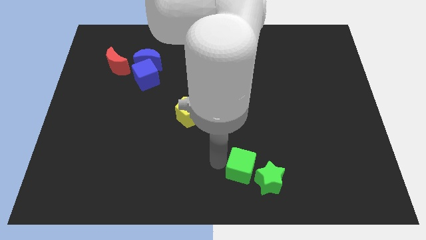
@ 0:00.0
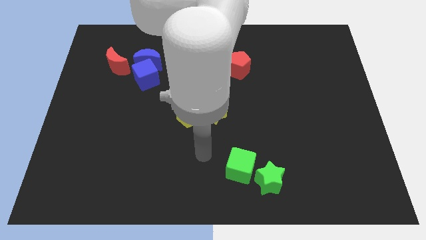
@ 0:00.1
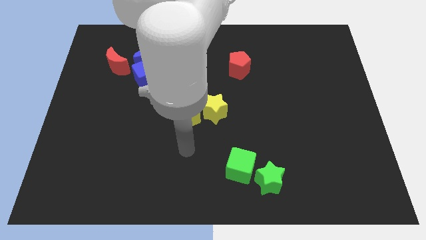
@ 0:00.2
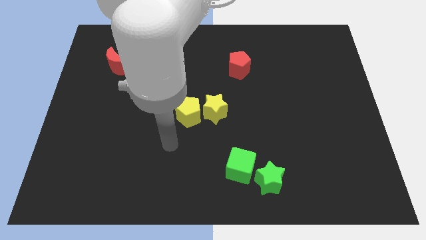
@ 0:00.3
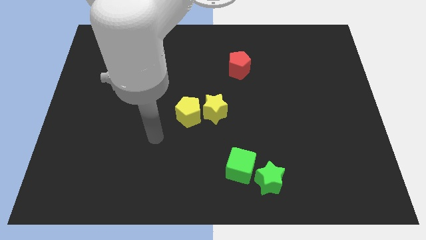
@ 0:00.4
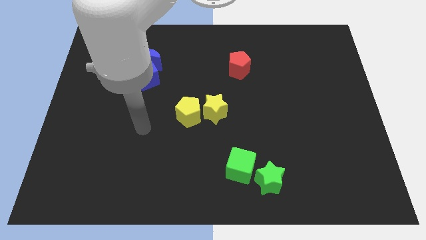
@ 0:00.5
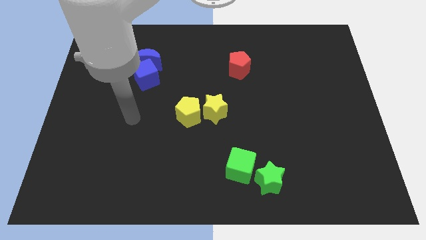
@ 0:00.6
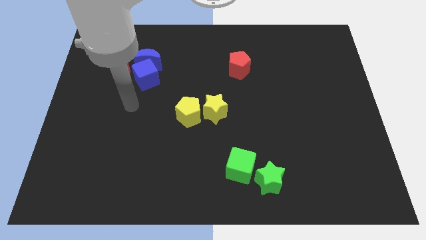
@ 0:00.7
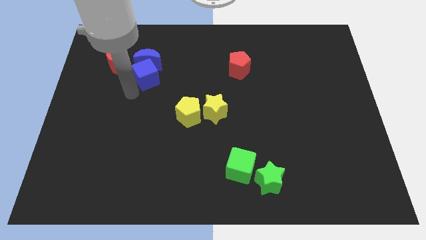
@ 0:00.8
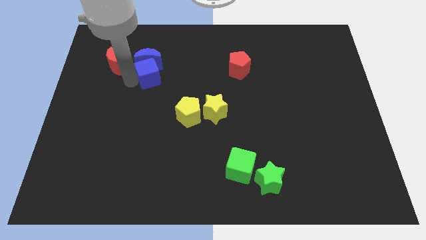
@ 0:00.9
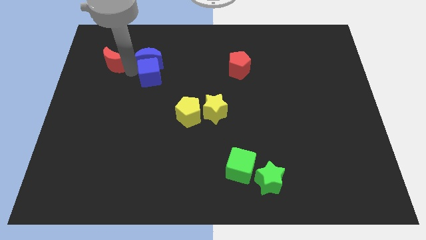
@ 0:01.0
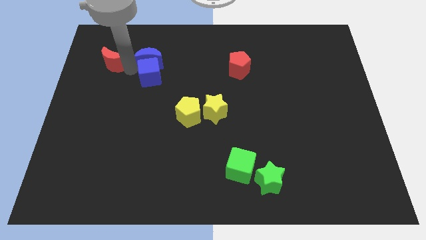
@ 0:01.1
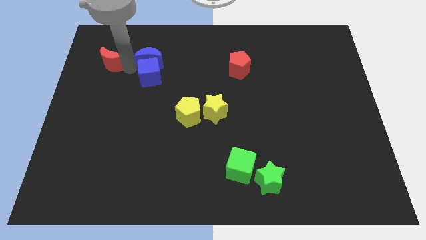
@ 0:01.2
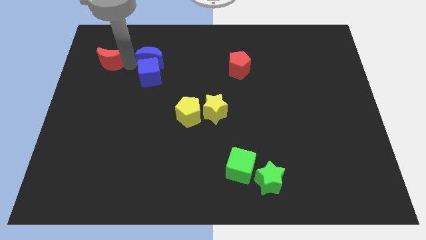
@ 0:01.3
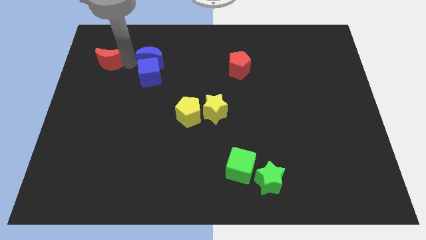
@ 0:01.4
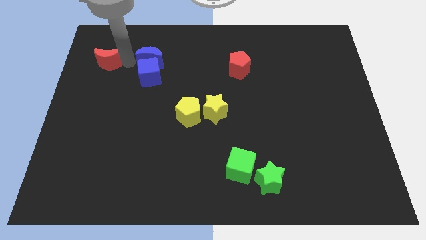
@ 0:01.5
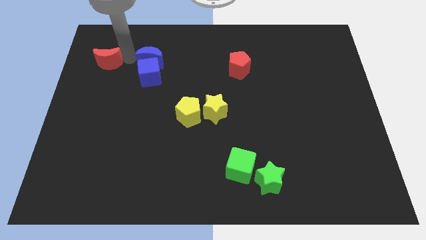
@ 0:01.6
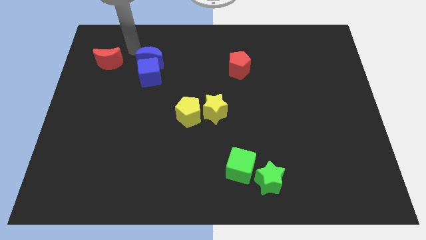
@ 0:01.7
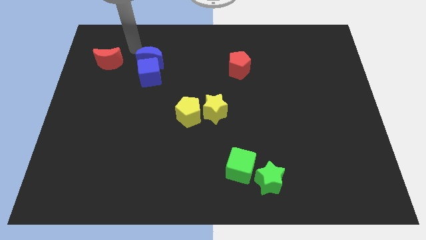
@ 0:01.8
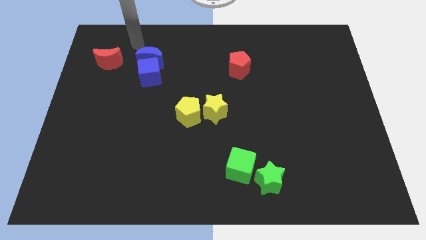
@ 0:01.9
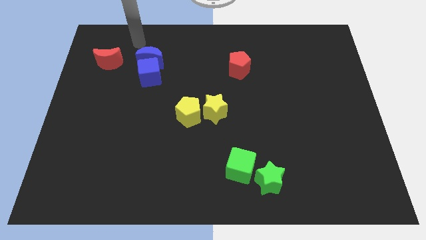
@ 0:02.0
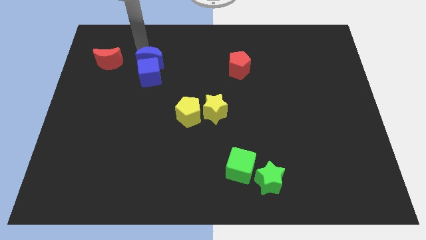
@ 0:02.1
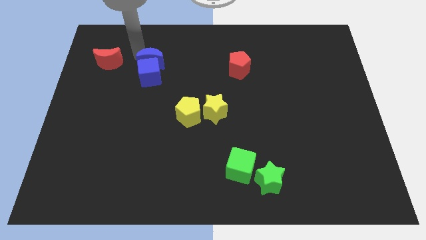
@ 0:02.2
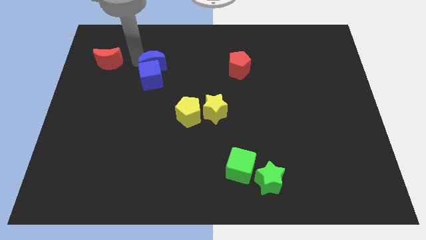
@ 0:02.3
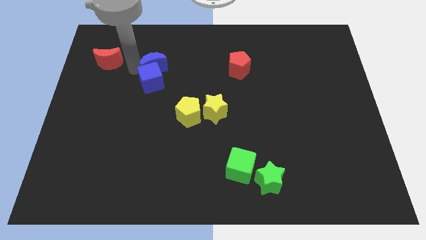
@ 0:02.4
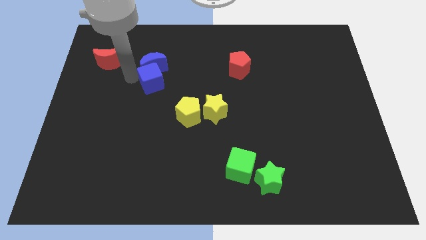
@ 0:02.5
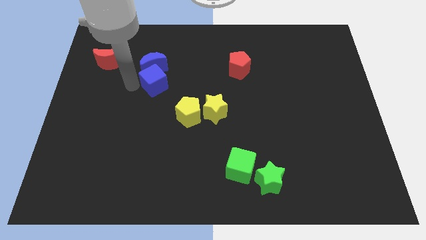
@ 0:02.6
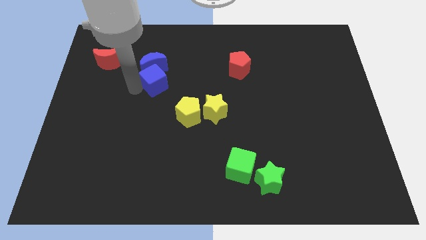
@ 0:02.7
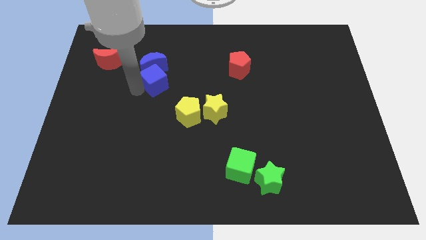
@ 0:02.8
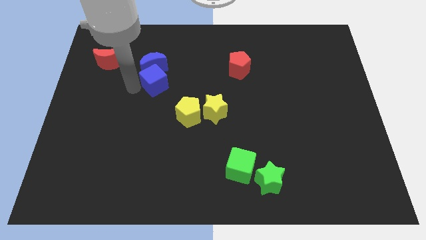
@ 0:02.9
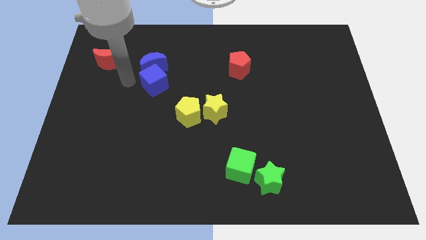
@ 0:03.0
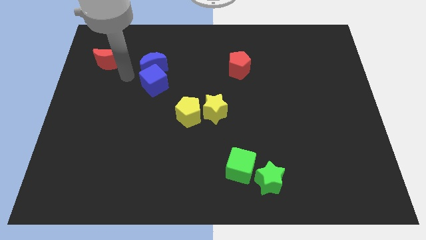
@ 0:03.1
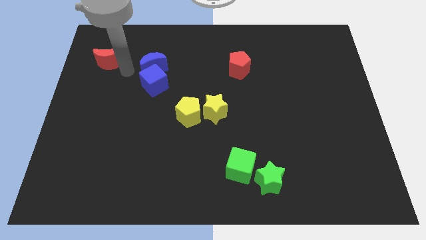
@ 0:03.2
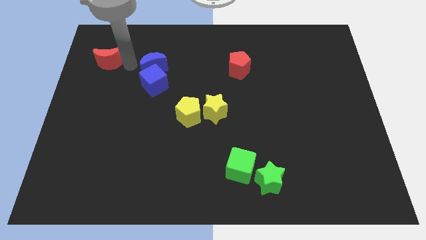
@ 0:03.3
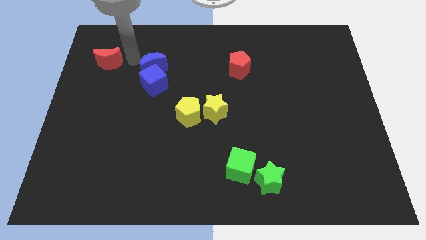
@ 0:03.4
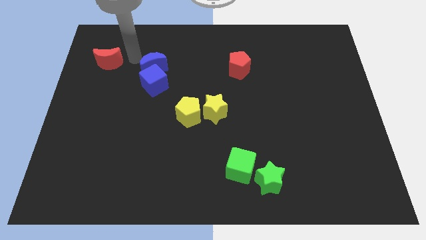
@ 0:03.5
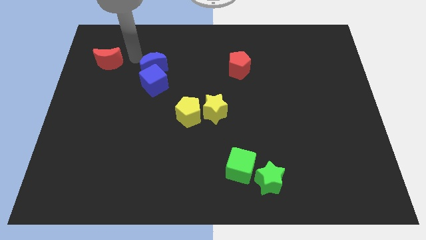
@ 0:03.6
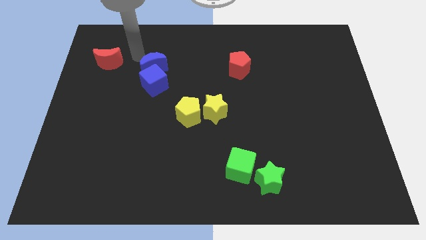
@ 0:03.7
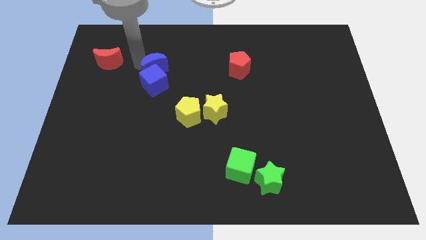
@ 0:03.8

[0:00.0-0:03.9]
separate the red moon and blue blocks

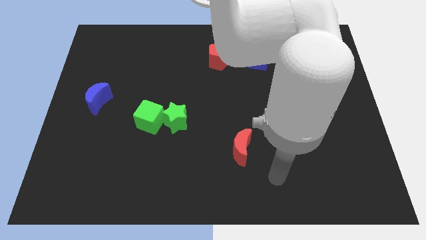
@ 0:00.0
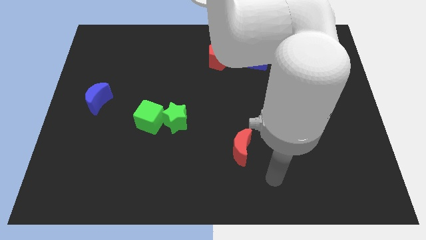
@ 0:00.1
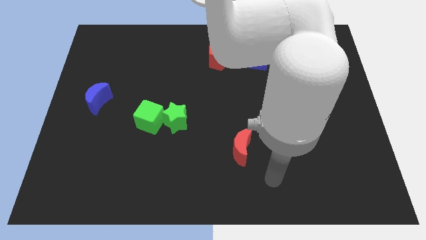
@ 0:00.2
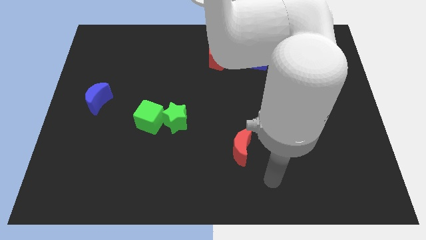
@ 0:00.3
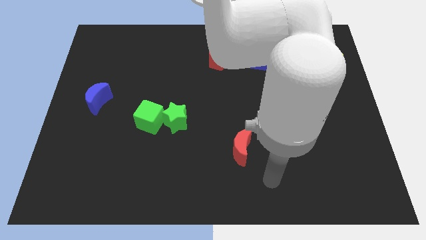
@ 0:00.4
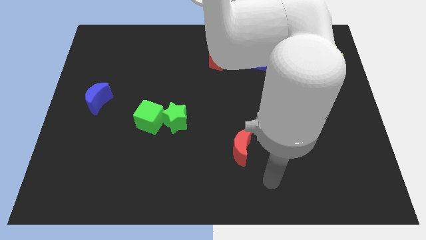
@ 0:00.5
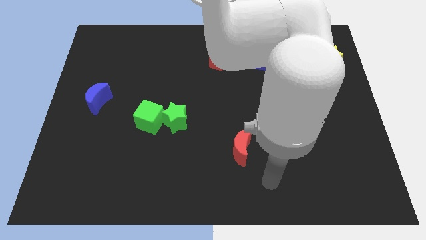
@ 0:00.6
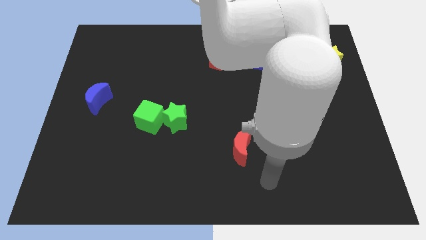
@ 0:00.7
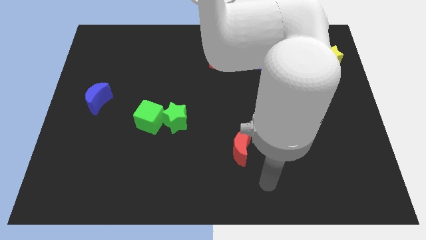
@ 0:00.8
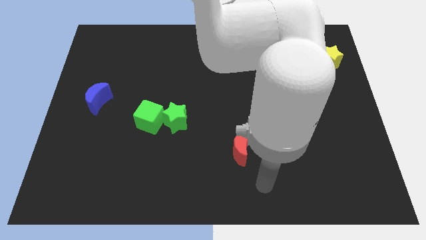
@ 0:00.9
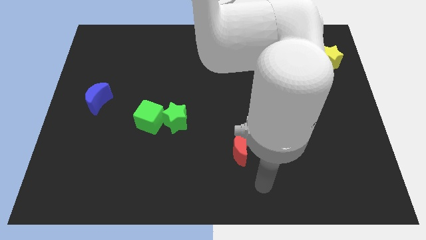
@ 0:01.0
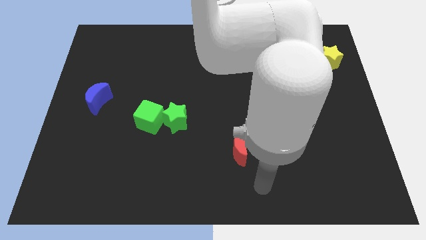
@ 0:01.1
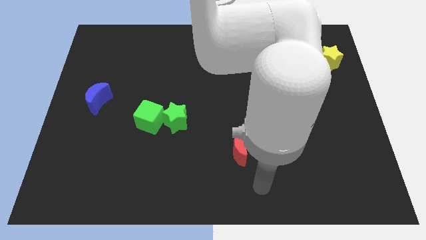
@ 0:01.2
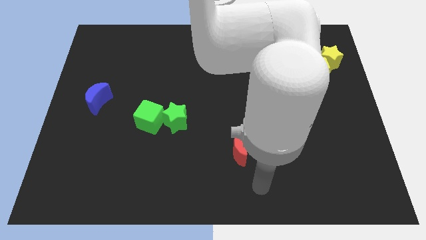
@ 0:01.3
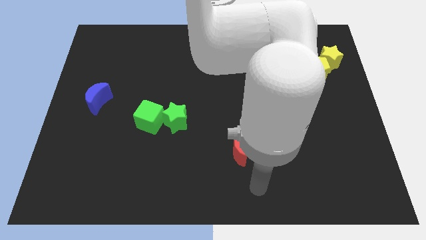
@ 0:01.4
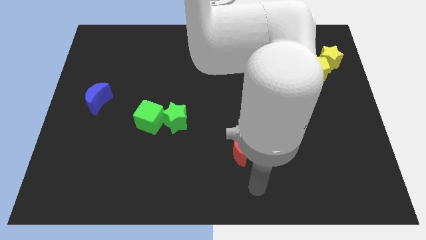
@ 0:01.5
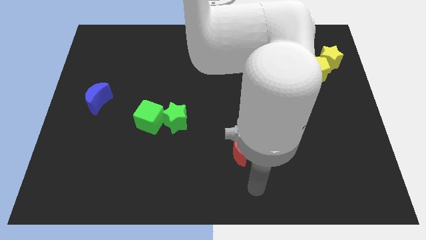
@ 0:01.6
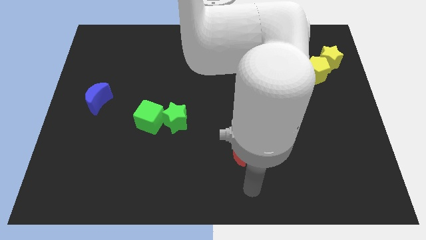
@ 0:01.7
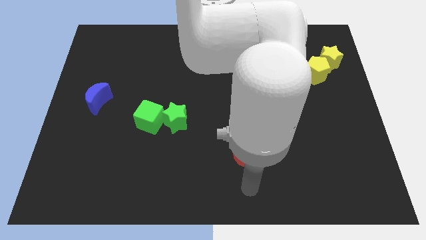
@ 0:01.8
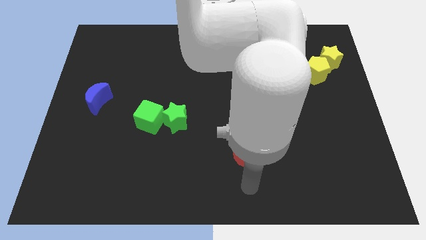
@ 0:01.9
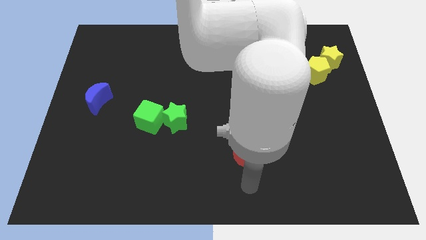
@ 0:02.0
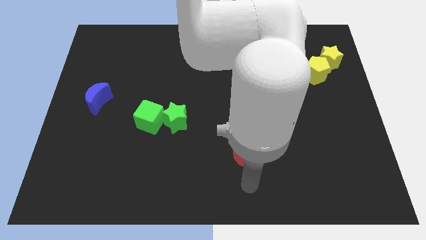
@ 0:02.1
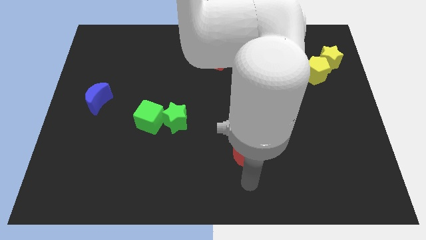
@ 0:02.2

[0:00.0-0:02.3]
put your arm at the bottom center of the board

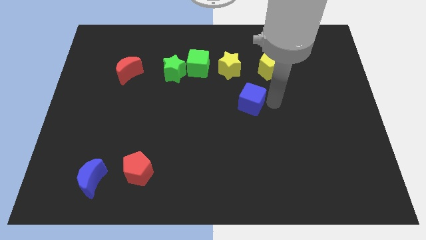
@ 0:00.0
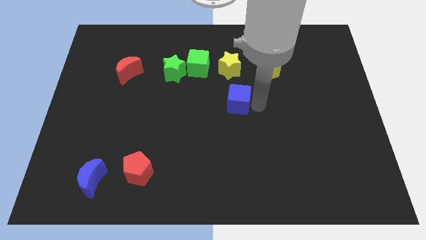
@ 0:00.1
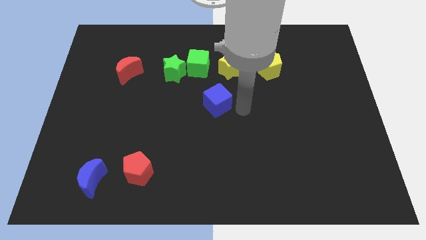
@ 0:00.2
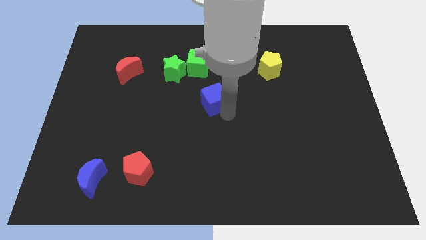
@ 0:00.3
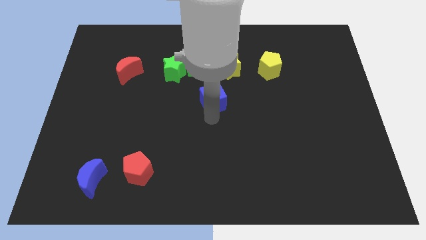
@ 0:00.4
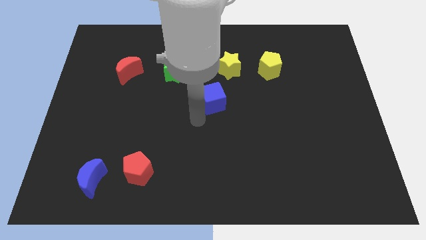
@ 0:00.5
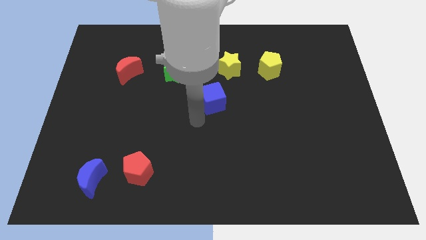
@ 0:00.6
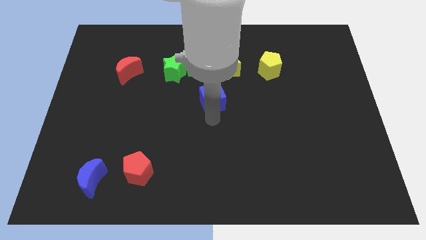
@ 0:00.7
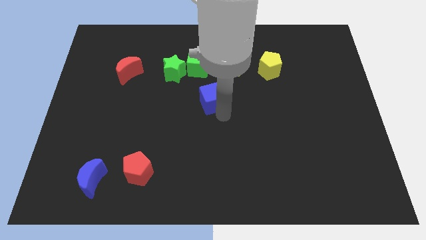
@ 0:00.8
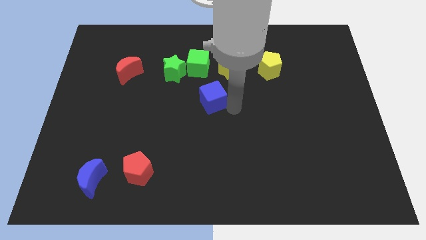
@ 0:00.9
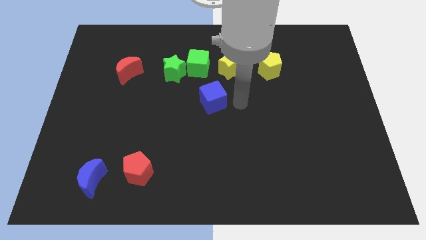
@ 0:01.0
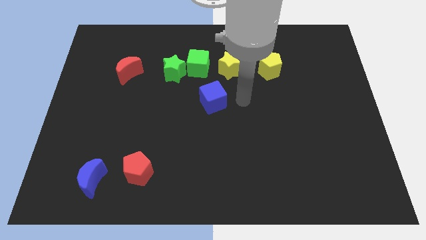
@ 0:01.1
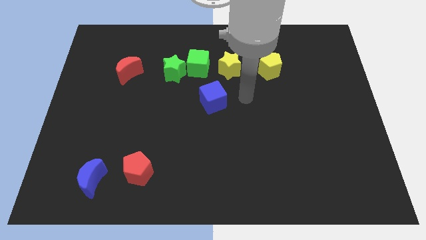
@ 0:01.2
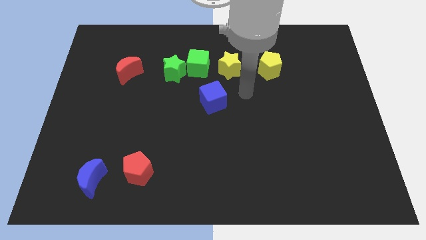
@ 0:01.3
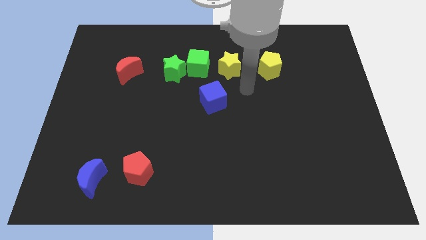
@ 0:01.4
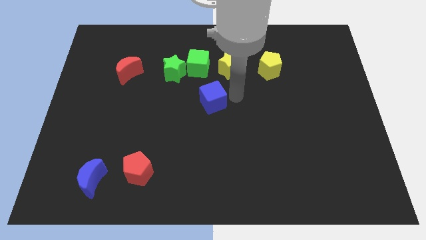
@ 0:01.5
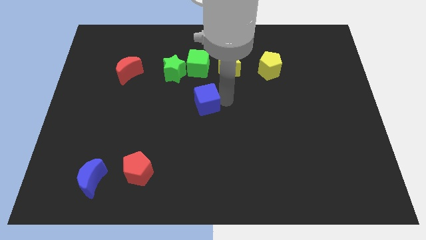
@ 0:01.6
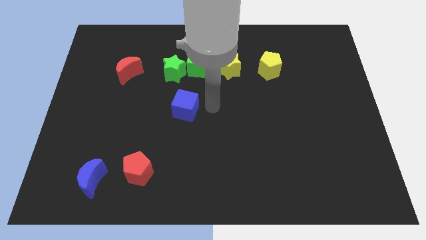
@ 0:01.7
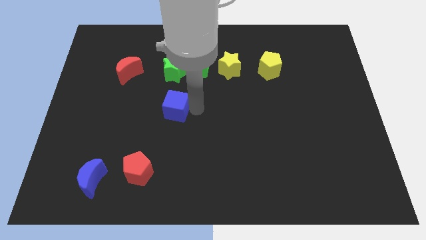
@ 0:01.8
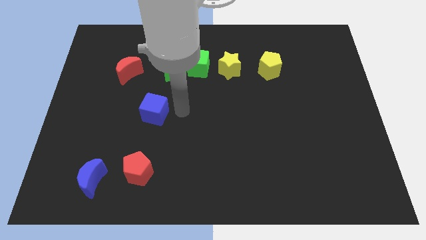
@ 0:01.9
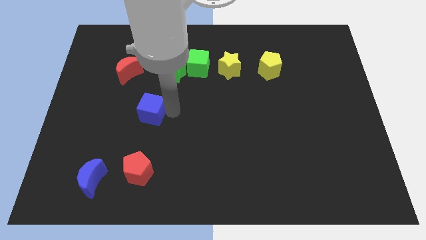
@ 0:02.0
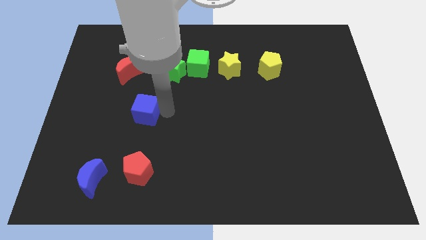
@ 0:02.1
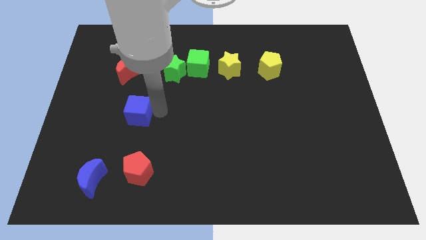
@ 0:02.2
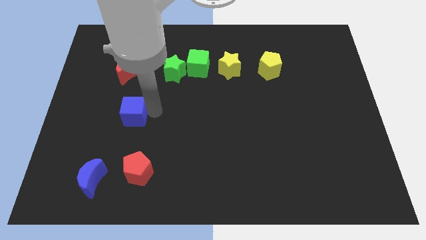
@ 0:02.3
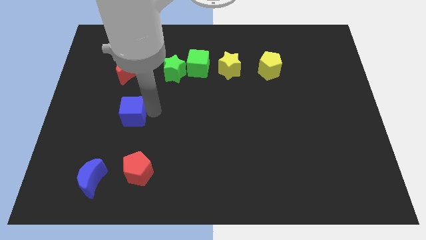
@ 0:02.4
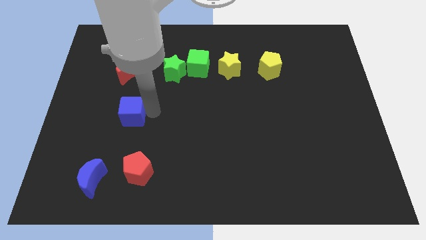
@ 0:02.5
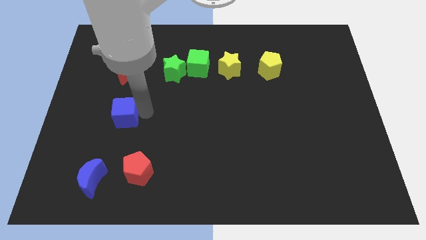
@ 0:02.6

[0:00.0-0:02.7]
push blue cube in between red blocks
